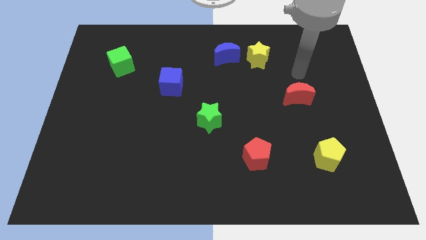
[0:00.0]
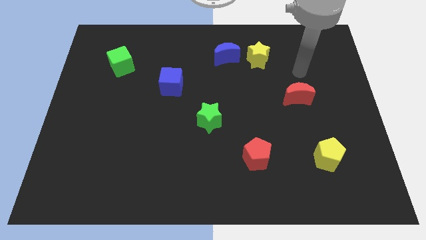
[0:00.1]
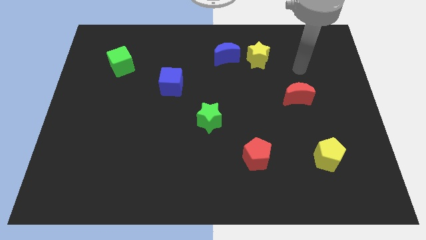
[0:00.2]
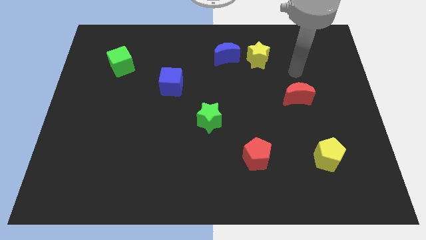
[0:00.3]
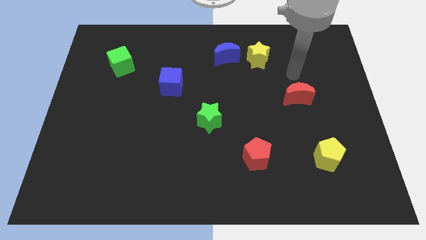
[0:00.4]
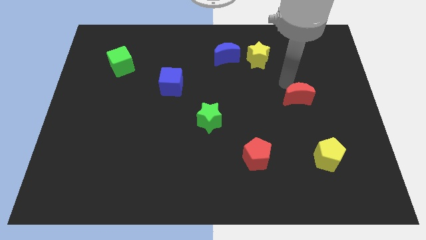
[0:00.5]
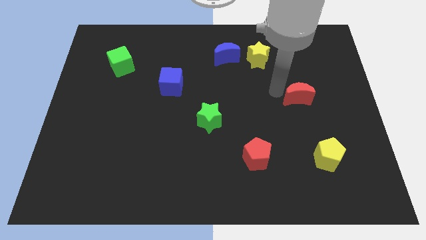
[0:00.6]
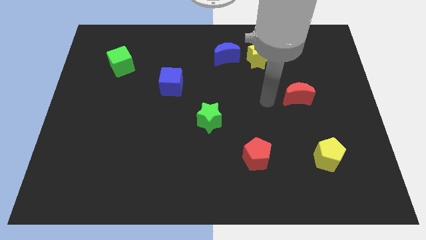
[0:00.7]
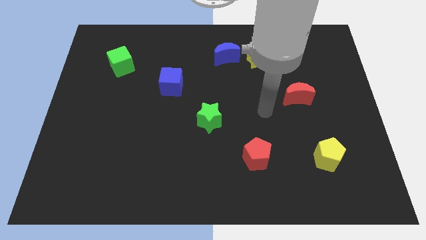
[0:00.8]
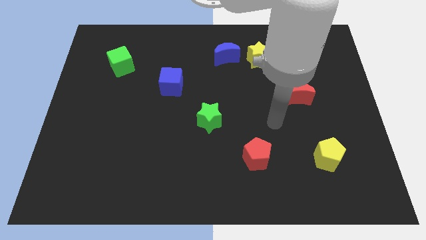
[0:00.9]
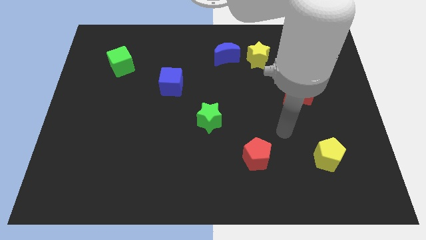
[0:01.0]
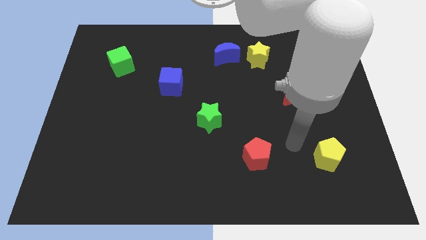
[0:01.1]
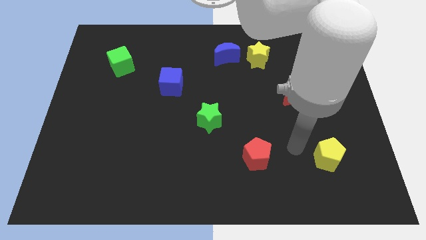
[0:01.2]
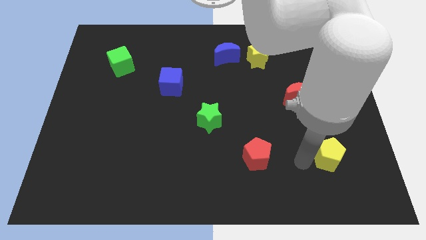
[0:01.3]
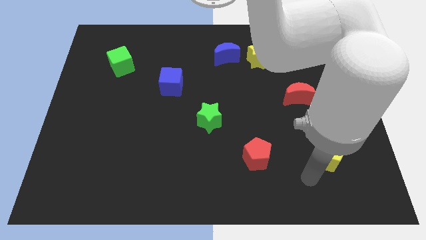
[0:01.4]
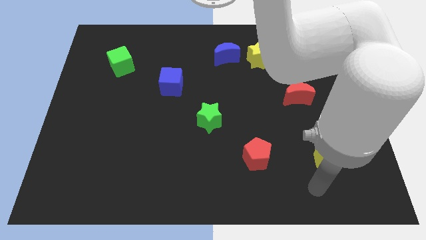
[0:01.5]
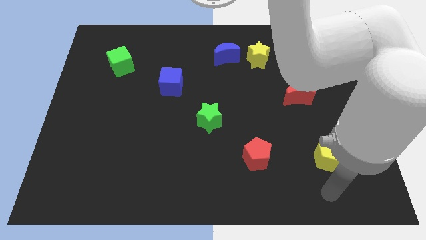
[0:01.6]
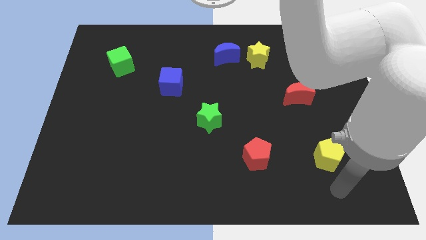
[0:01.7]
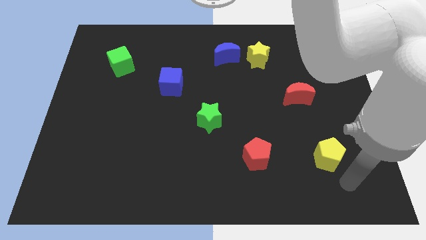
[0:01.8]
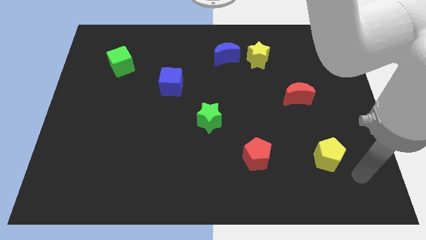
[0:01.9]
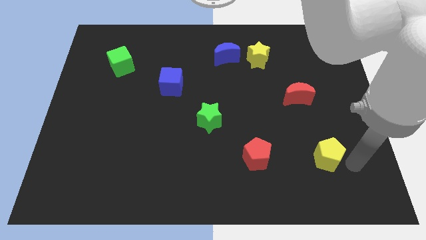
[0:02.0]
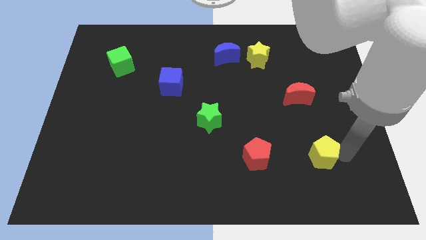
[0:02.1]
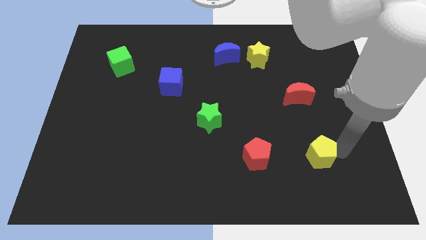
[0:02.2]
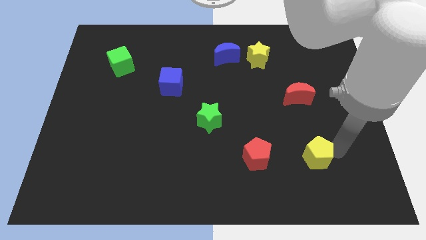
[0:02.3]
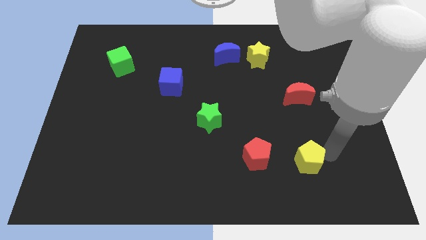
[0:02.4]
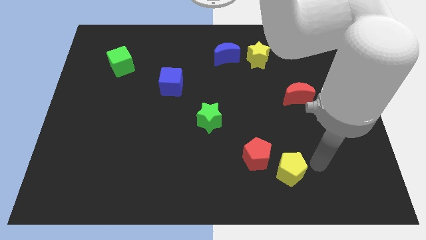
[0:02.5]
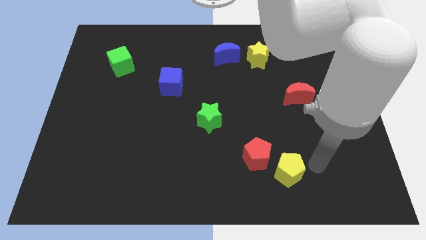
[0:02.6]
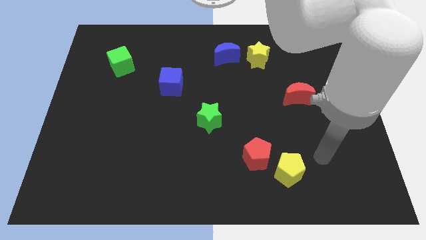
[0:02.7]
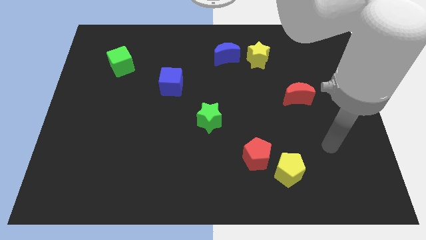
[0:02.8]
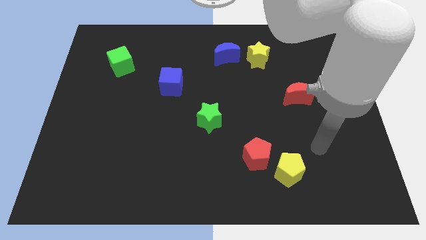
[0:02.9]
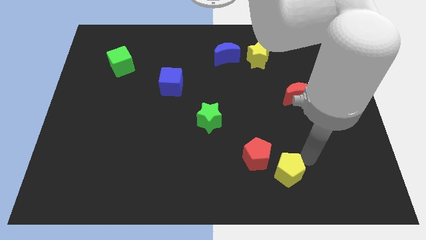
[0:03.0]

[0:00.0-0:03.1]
push the yellow pentagon near the red pentagon

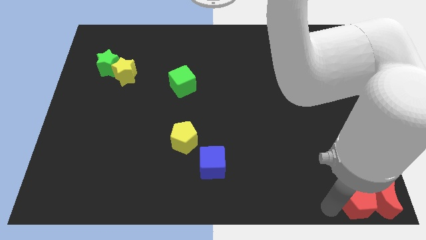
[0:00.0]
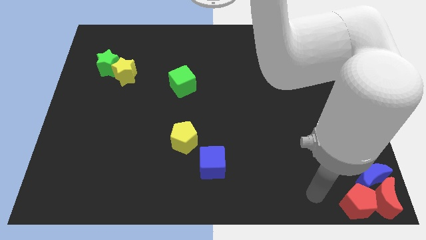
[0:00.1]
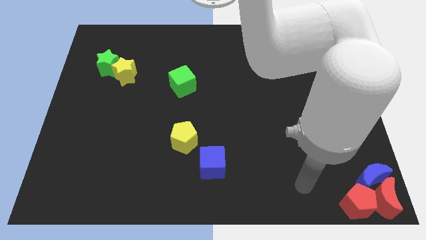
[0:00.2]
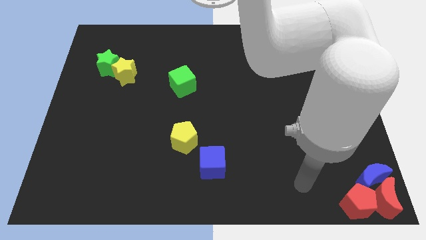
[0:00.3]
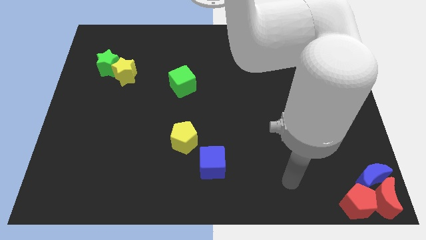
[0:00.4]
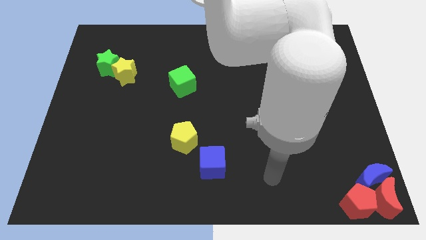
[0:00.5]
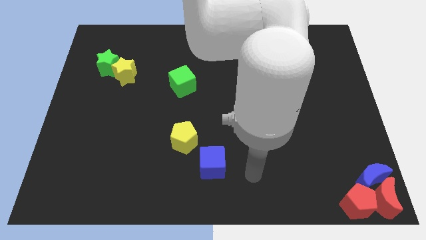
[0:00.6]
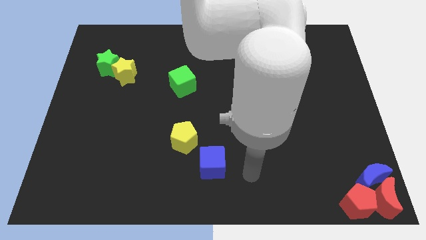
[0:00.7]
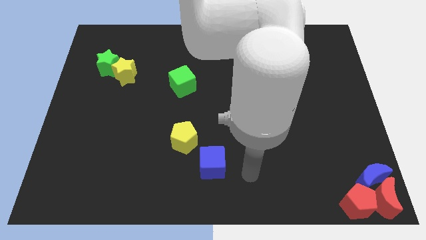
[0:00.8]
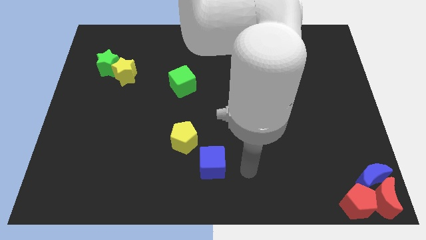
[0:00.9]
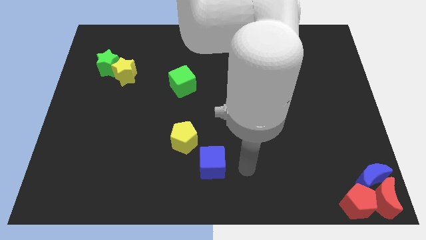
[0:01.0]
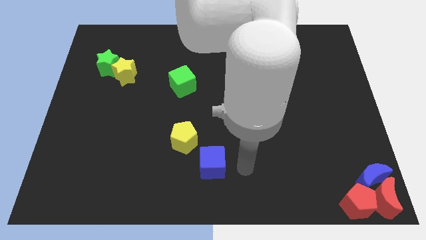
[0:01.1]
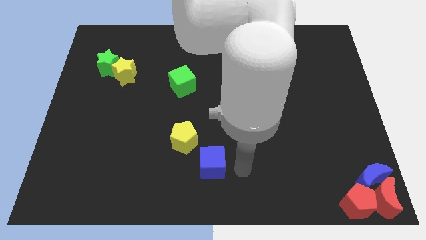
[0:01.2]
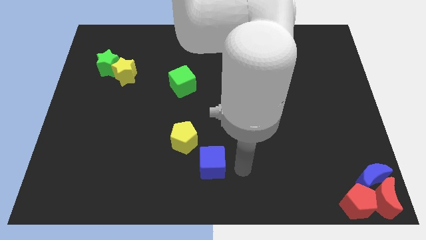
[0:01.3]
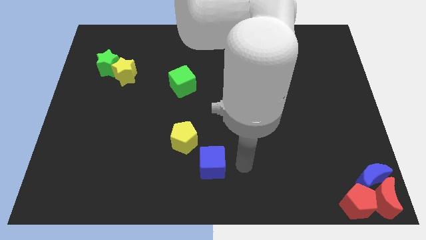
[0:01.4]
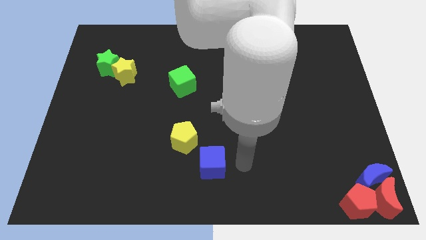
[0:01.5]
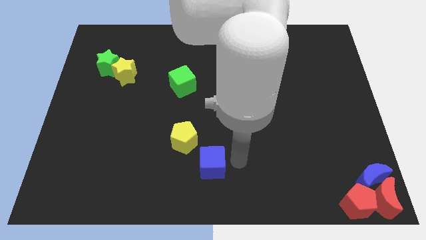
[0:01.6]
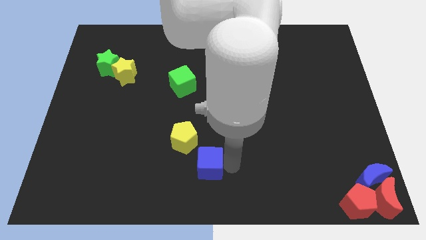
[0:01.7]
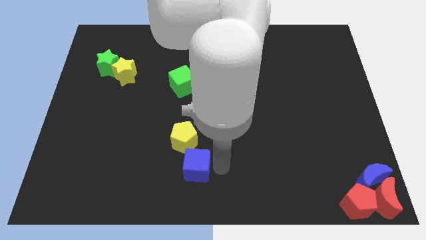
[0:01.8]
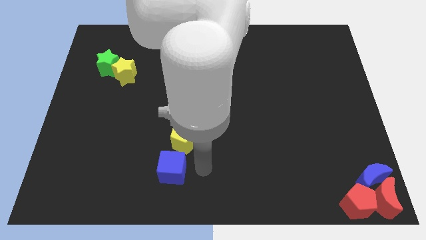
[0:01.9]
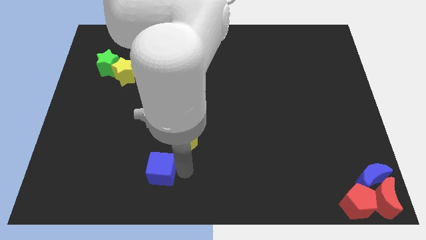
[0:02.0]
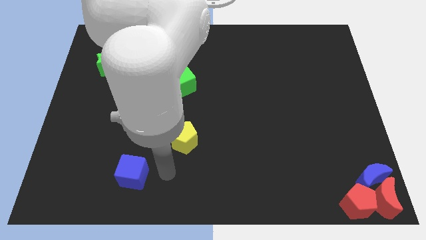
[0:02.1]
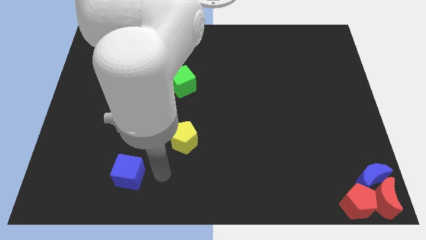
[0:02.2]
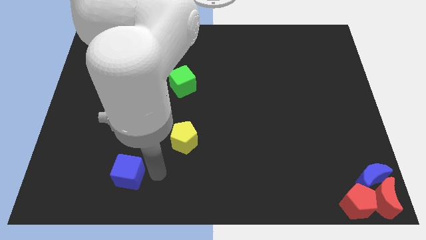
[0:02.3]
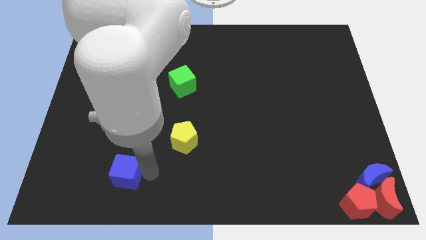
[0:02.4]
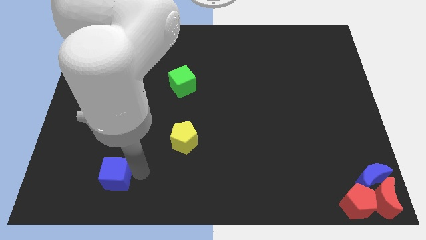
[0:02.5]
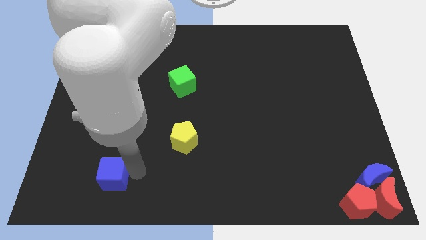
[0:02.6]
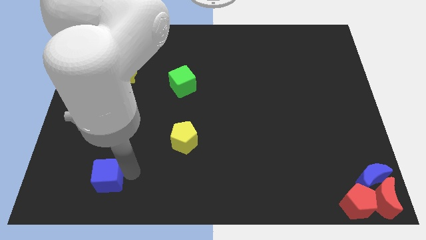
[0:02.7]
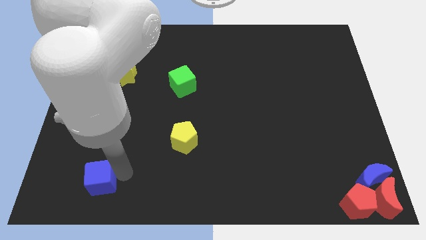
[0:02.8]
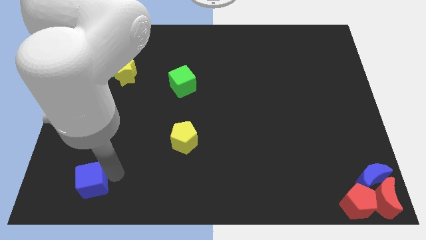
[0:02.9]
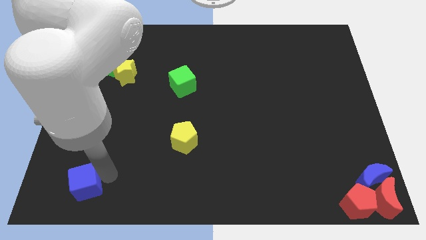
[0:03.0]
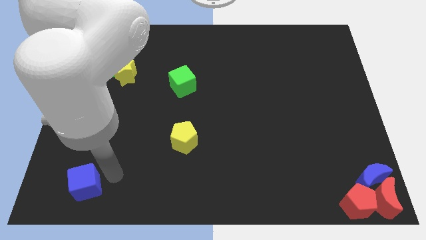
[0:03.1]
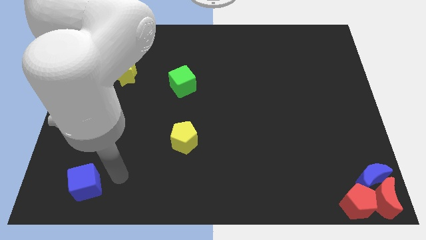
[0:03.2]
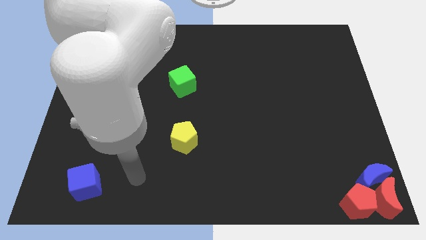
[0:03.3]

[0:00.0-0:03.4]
move the blue cube to the bottom left of the board

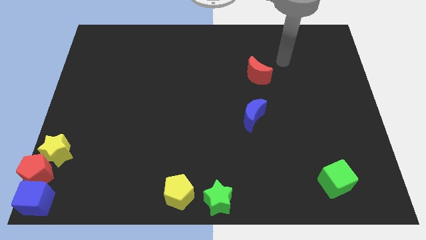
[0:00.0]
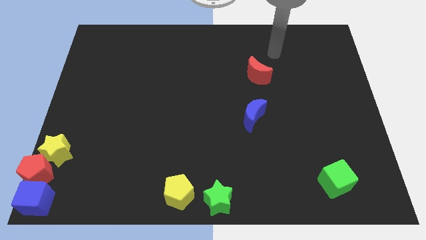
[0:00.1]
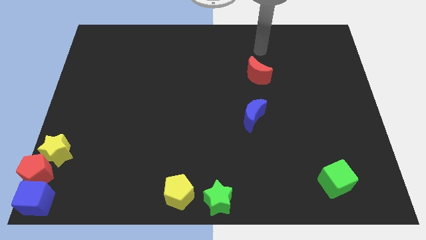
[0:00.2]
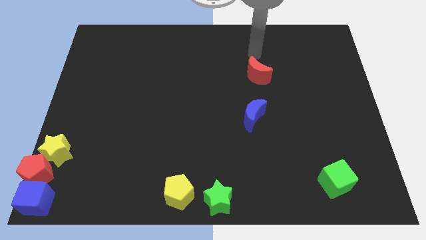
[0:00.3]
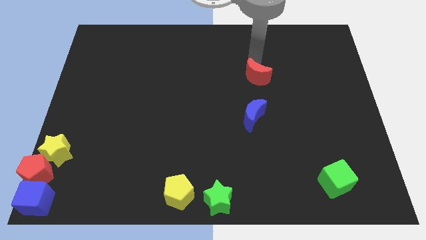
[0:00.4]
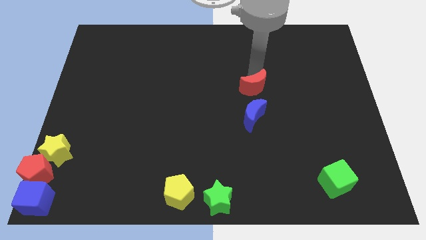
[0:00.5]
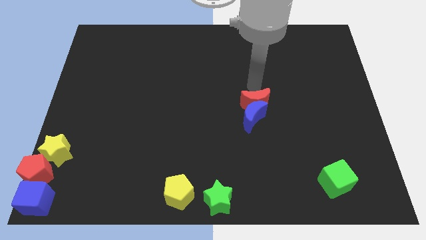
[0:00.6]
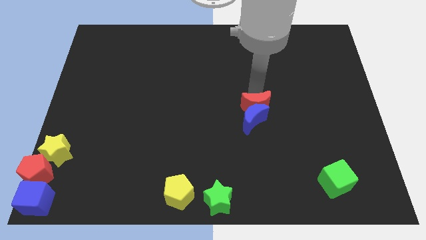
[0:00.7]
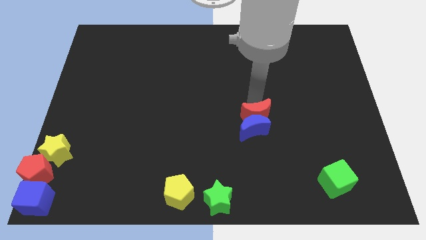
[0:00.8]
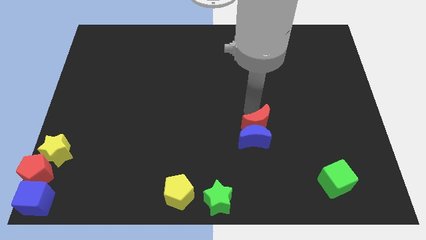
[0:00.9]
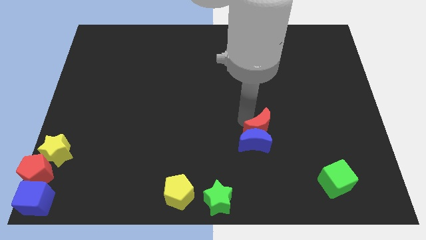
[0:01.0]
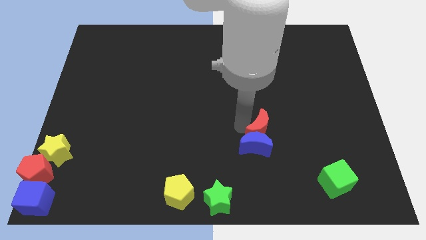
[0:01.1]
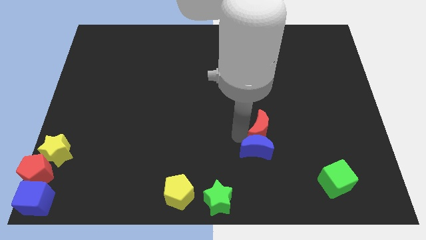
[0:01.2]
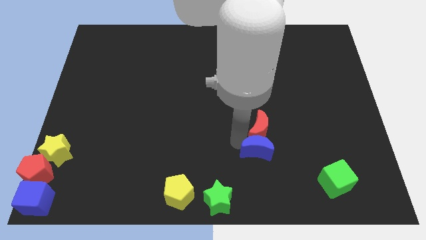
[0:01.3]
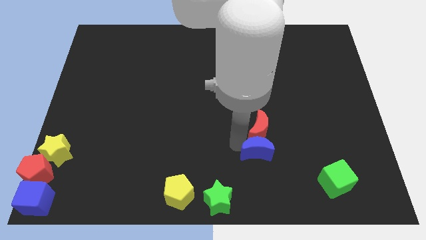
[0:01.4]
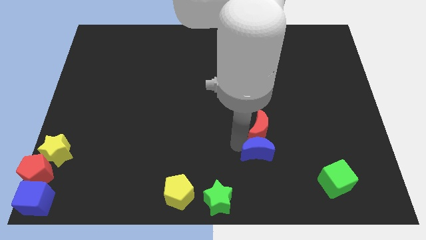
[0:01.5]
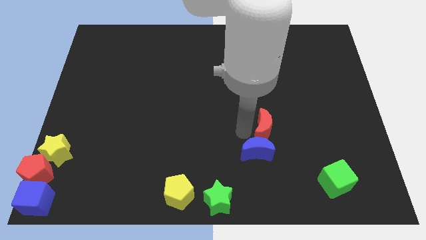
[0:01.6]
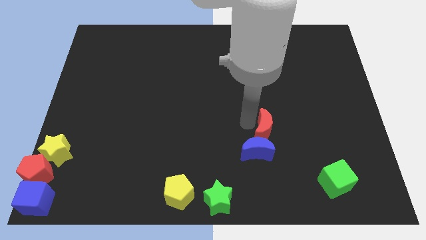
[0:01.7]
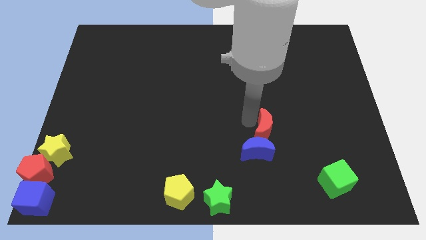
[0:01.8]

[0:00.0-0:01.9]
push the red crescent with the blue crescent to the bottom

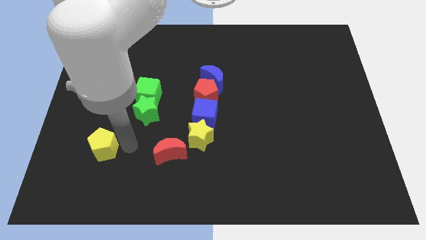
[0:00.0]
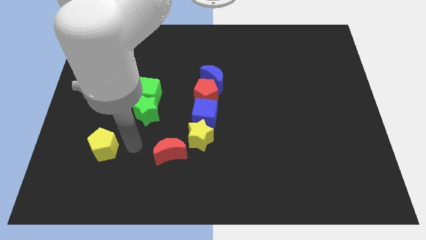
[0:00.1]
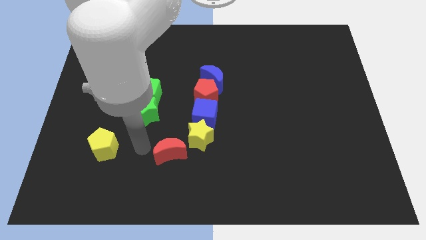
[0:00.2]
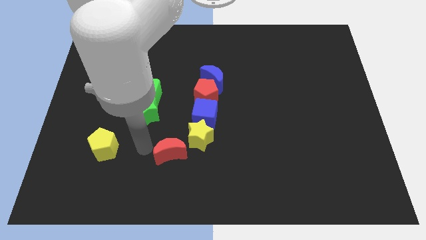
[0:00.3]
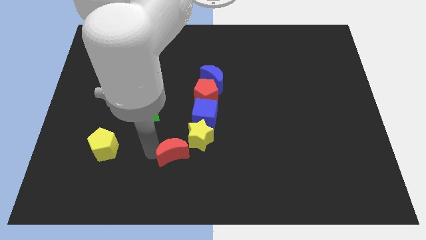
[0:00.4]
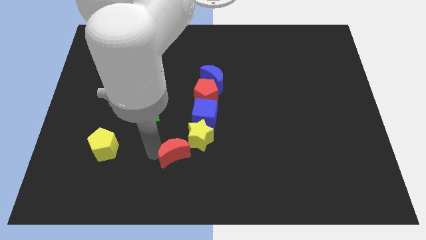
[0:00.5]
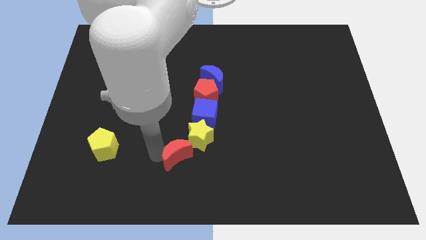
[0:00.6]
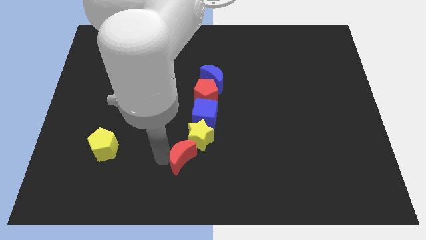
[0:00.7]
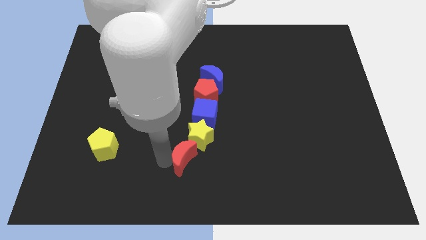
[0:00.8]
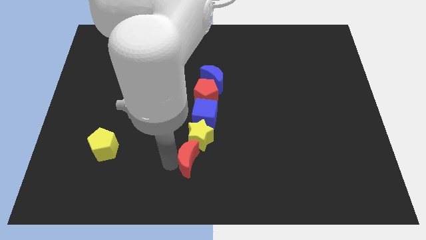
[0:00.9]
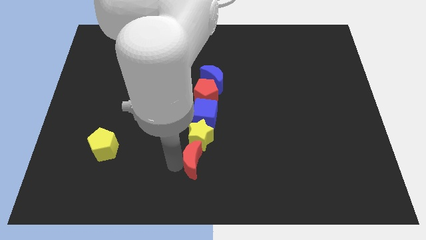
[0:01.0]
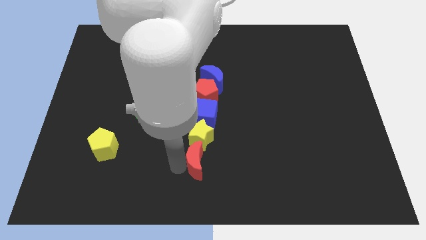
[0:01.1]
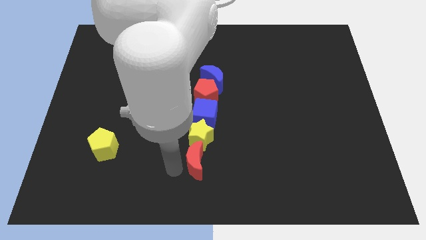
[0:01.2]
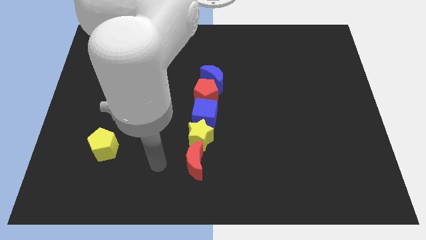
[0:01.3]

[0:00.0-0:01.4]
push the red crescent to the bottom of the yellow star
